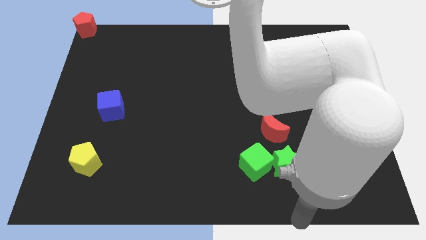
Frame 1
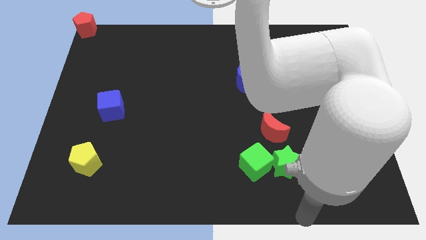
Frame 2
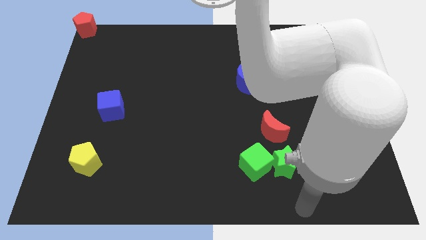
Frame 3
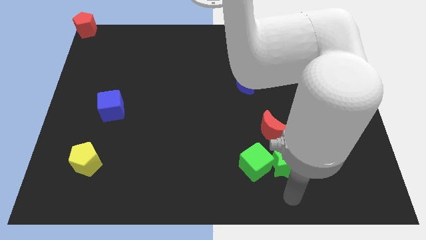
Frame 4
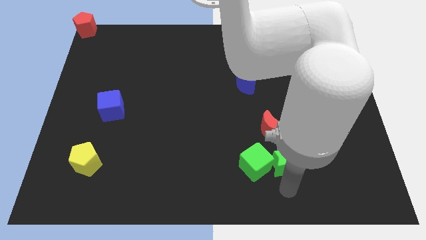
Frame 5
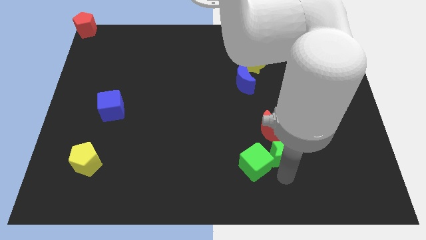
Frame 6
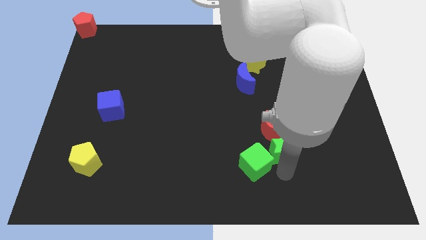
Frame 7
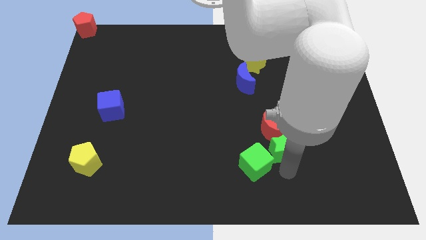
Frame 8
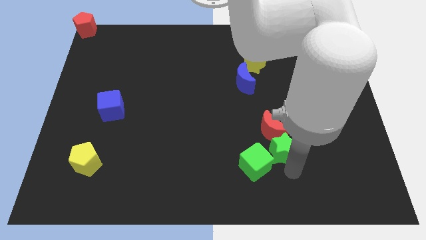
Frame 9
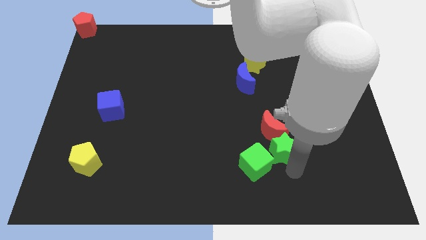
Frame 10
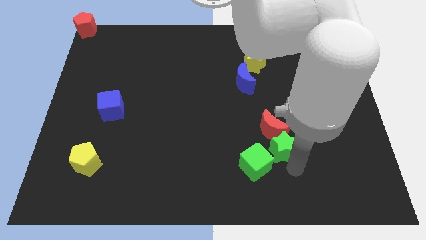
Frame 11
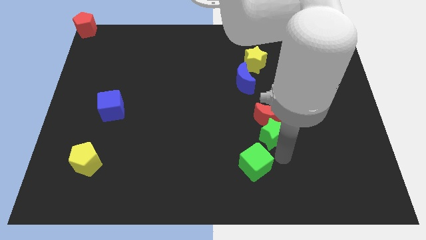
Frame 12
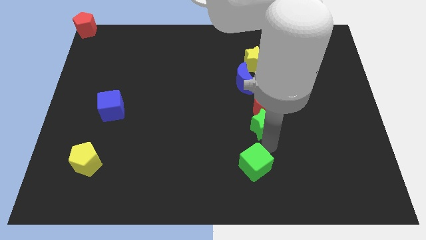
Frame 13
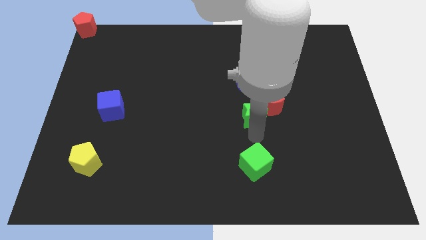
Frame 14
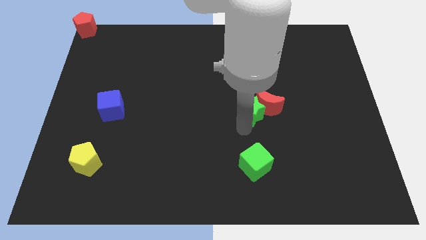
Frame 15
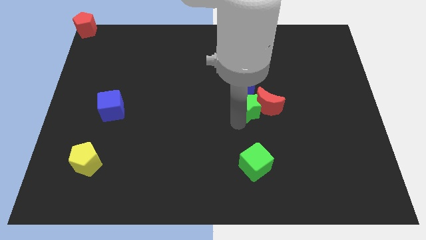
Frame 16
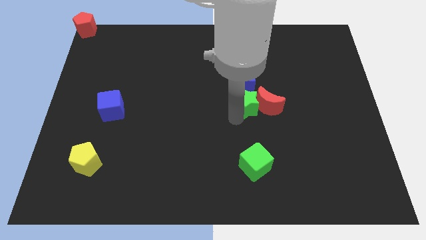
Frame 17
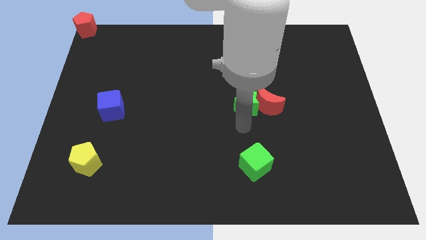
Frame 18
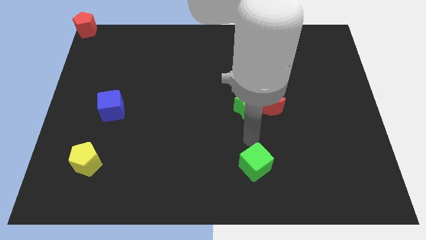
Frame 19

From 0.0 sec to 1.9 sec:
push the green star along with red crescent below the blue crescent

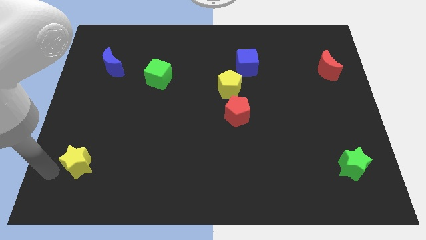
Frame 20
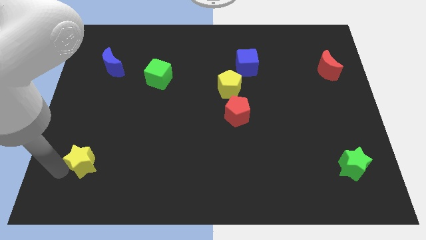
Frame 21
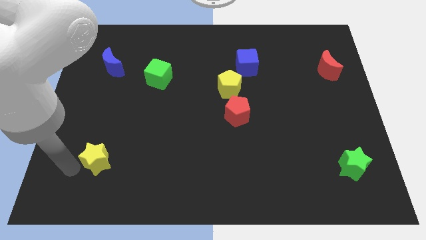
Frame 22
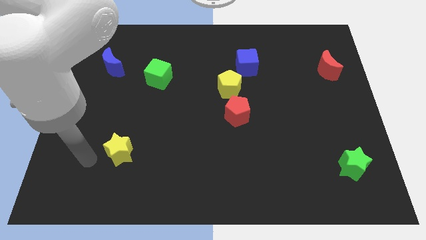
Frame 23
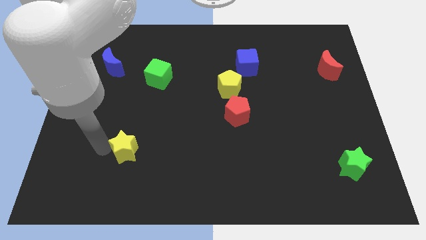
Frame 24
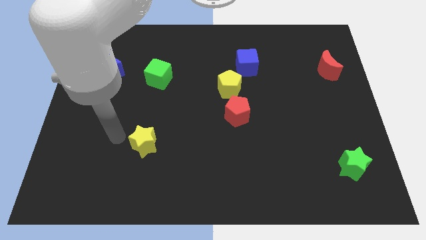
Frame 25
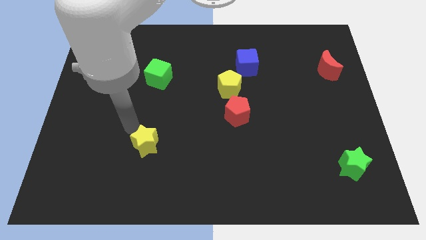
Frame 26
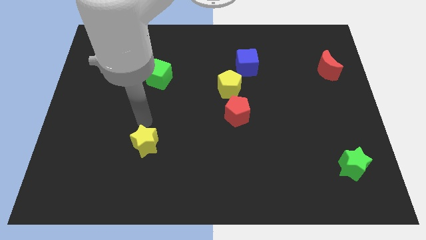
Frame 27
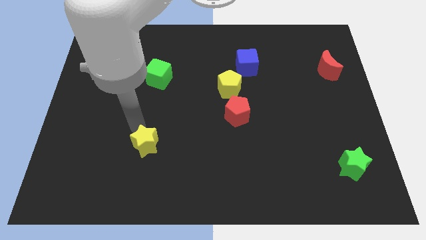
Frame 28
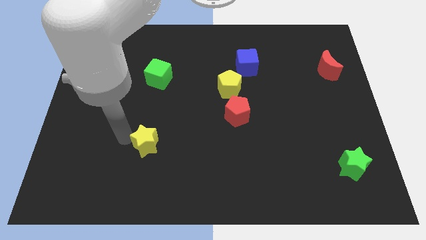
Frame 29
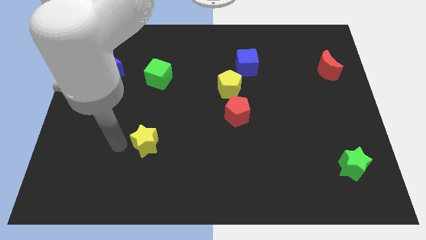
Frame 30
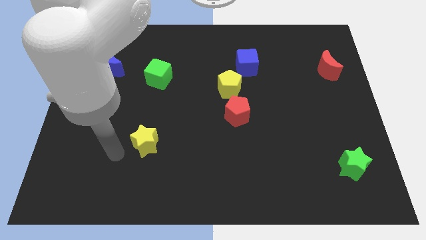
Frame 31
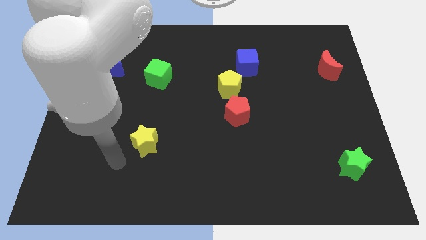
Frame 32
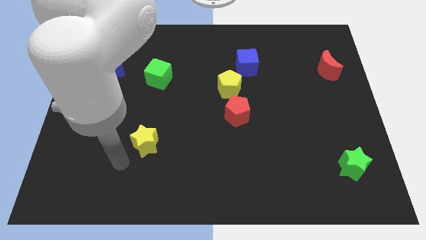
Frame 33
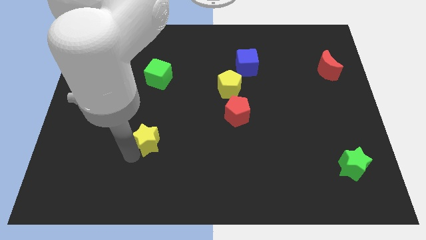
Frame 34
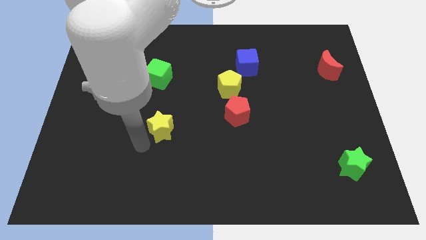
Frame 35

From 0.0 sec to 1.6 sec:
push the yellow star to the bottom of the green cube

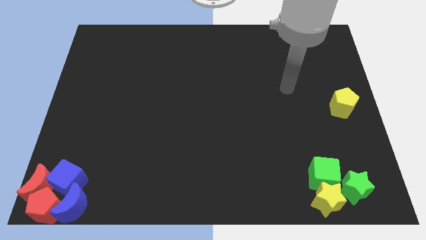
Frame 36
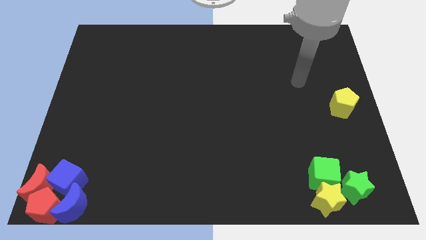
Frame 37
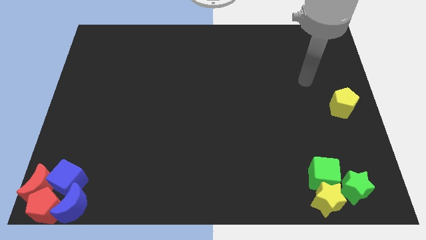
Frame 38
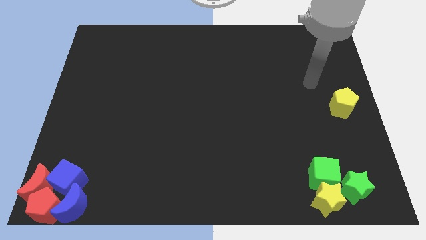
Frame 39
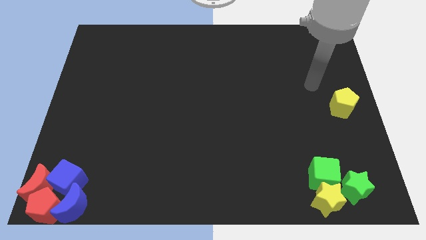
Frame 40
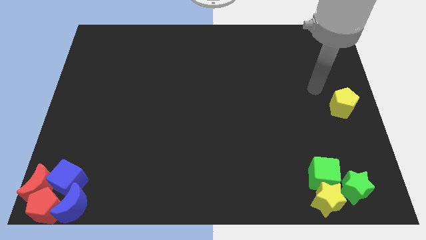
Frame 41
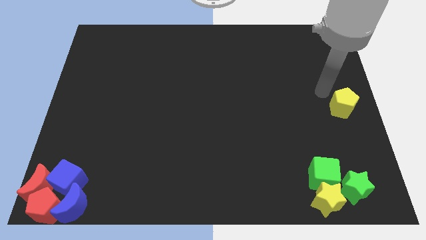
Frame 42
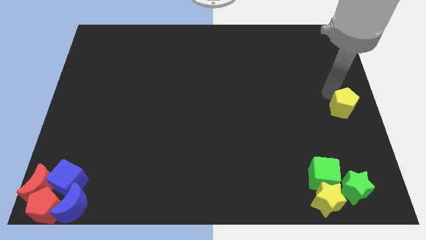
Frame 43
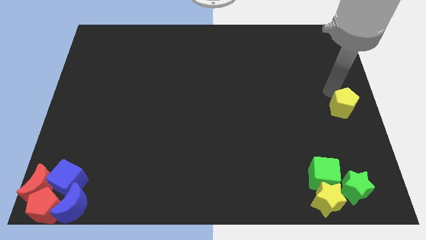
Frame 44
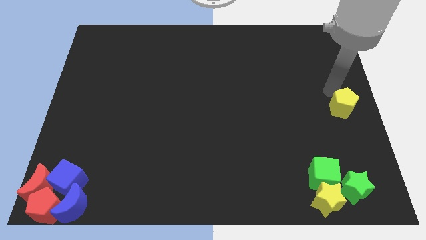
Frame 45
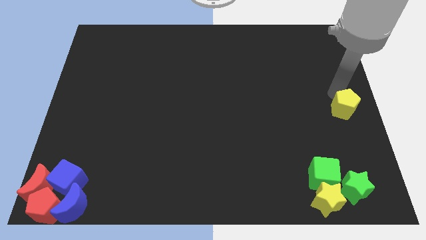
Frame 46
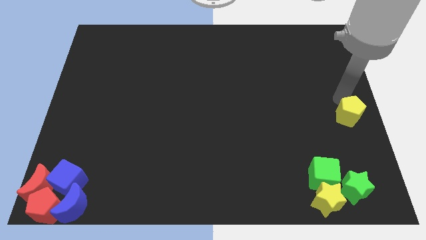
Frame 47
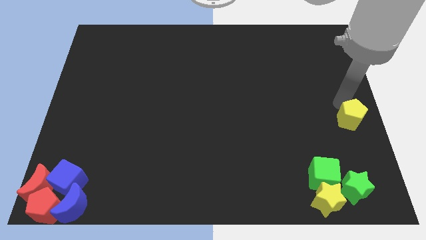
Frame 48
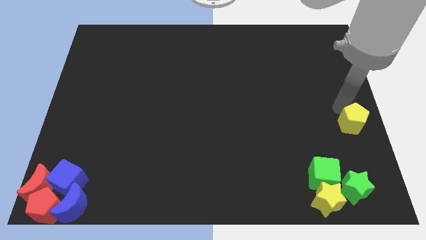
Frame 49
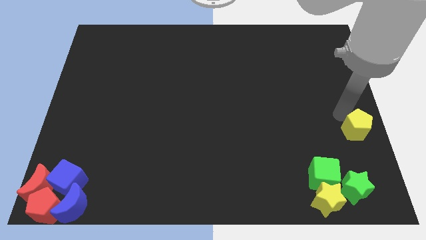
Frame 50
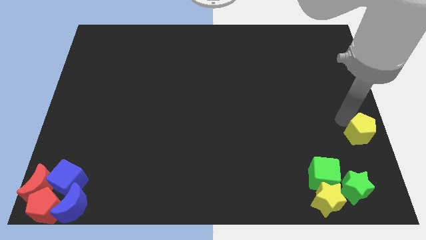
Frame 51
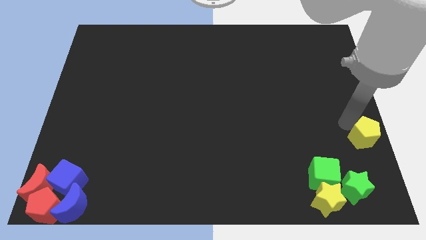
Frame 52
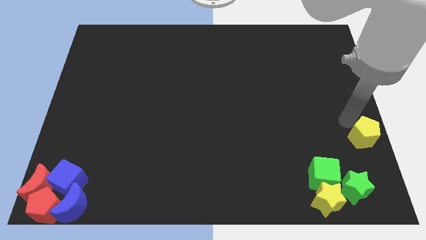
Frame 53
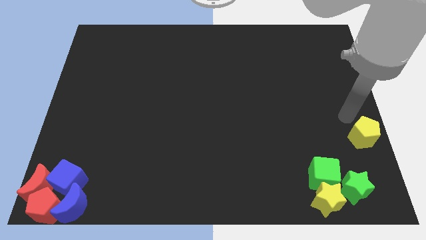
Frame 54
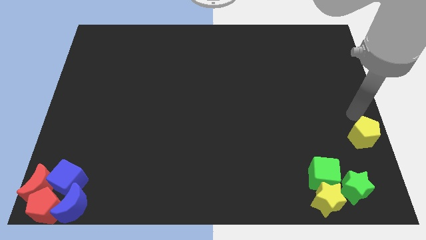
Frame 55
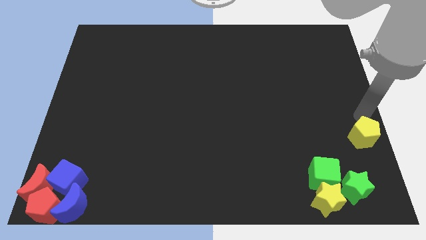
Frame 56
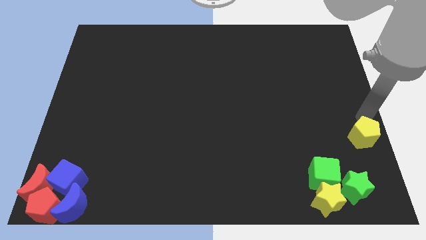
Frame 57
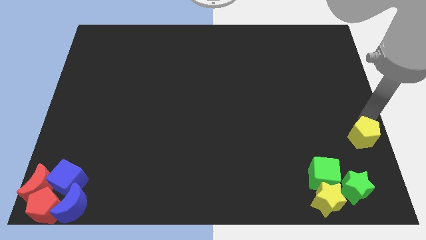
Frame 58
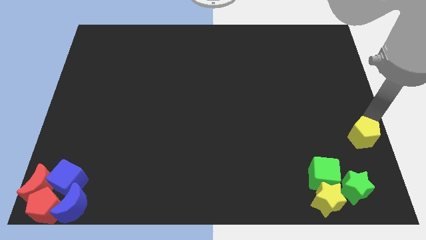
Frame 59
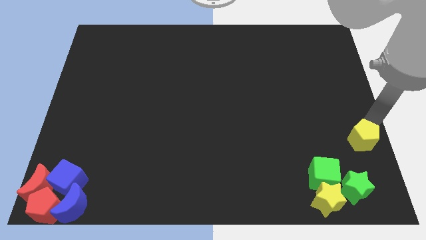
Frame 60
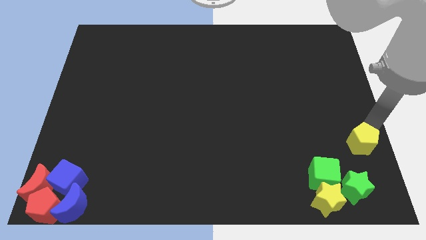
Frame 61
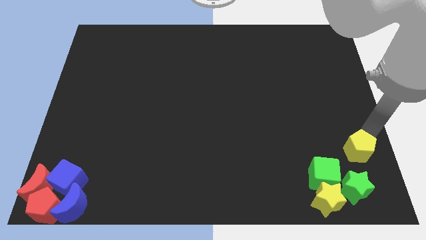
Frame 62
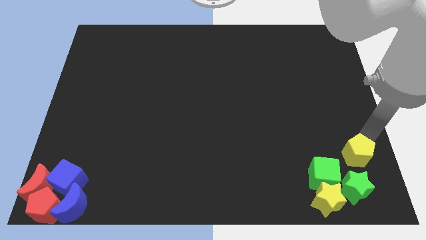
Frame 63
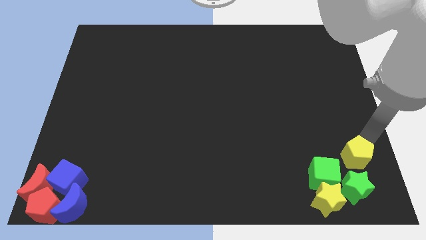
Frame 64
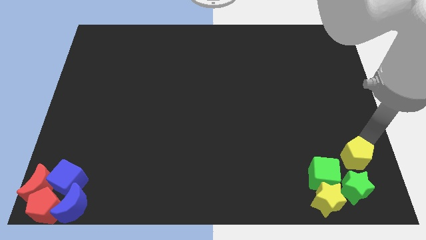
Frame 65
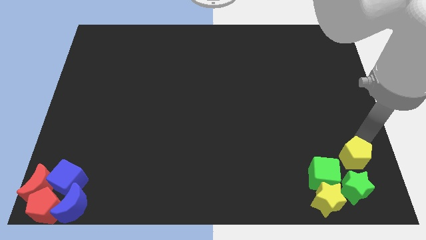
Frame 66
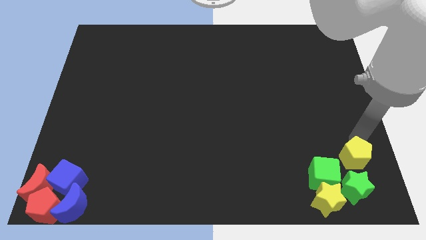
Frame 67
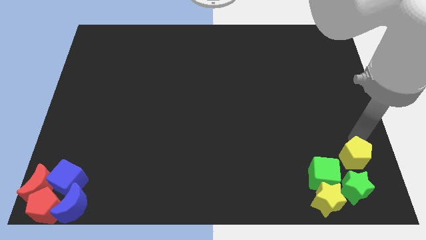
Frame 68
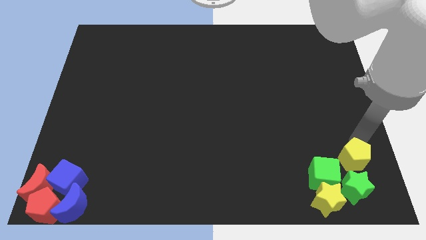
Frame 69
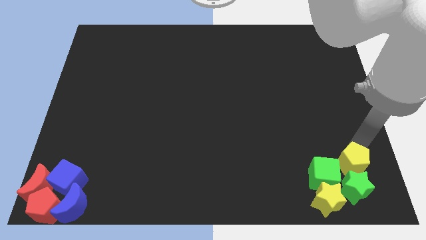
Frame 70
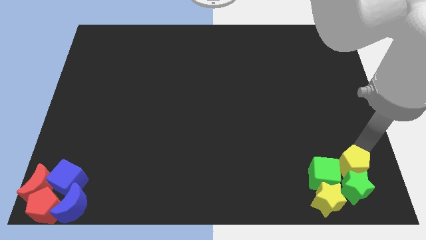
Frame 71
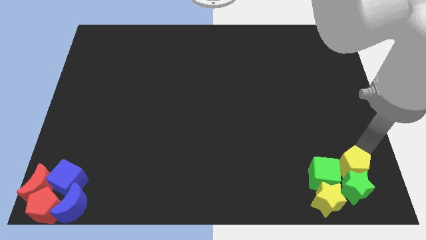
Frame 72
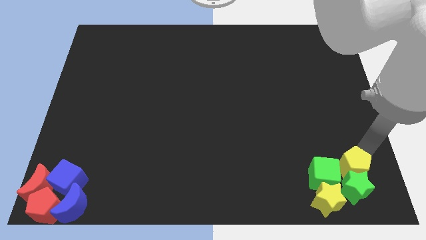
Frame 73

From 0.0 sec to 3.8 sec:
push the yellow pentagon into the group of green and yellow blocks

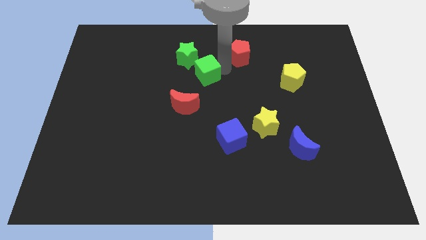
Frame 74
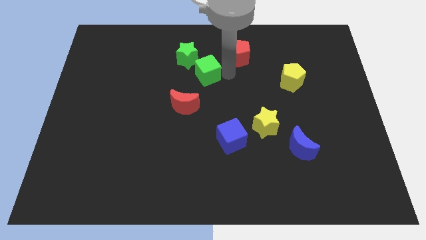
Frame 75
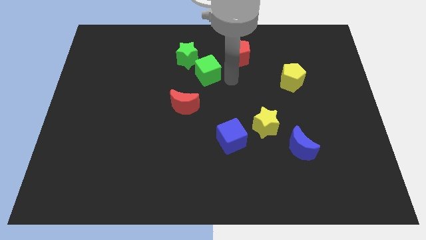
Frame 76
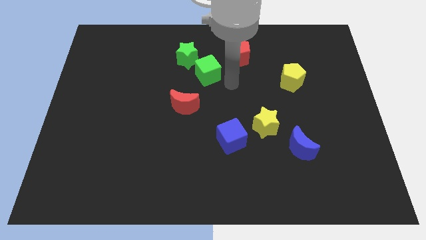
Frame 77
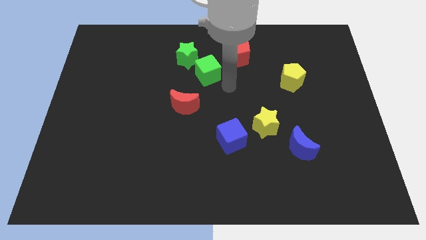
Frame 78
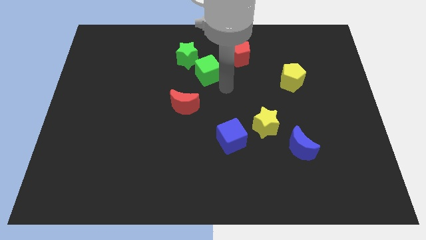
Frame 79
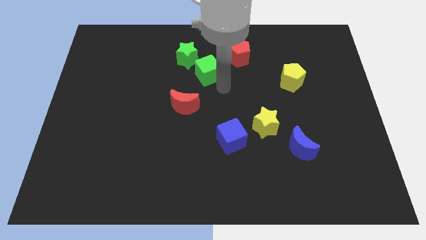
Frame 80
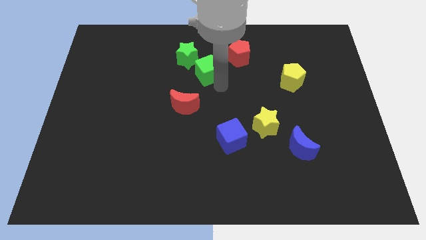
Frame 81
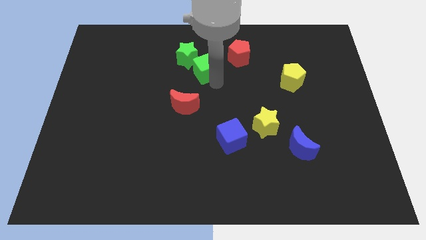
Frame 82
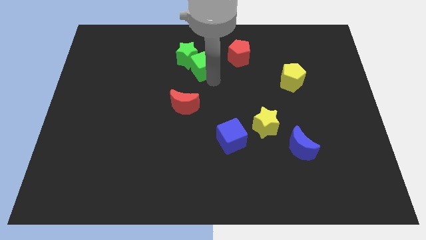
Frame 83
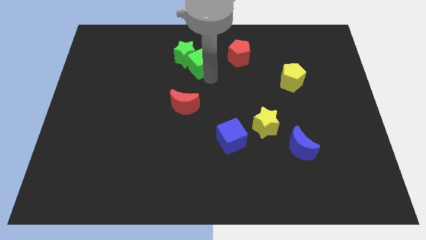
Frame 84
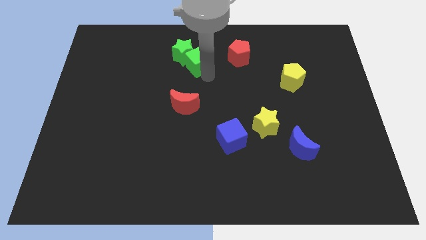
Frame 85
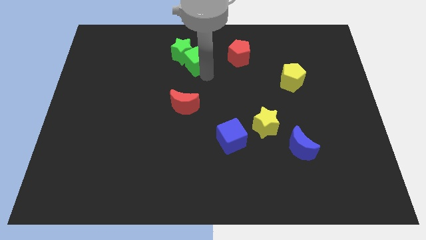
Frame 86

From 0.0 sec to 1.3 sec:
push the green cube into the green star

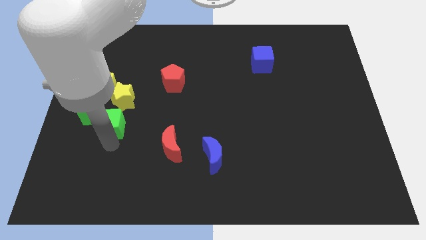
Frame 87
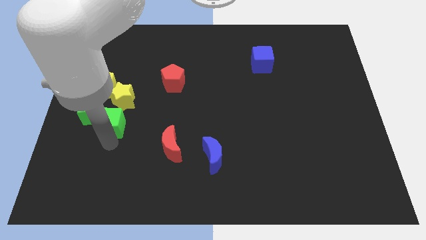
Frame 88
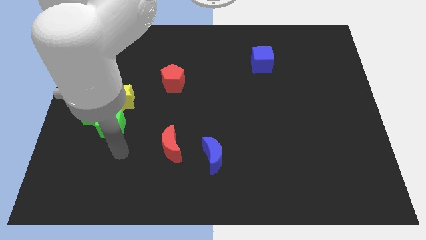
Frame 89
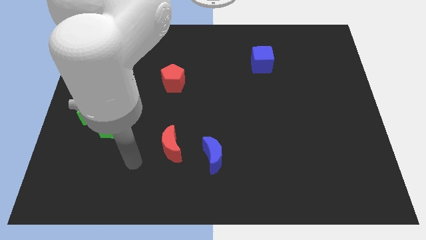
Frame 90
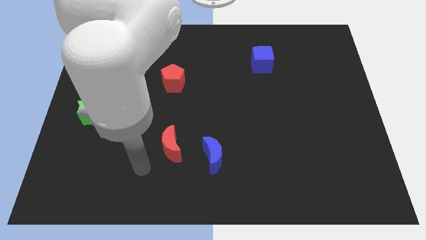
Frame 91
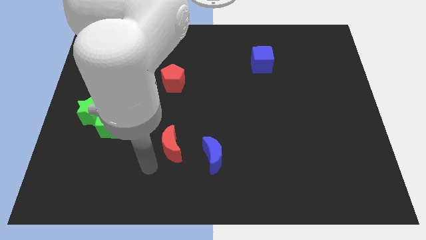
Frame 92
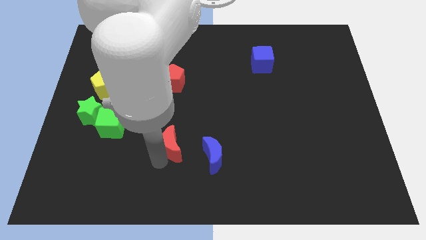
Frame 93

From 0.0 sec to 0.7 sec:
move aside from the bottom side of the green cube
